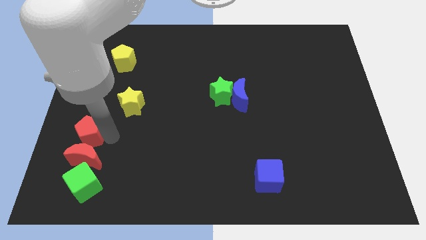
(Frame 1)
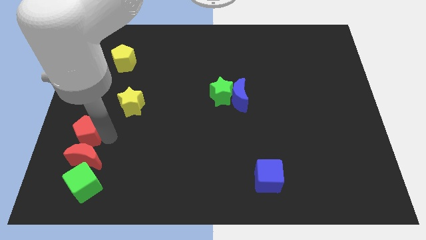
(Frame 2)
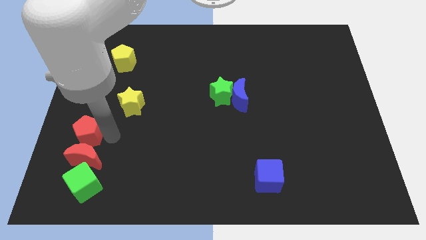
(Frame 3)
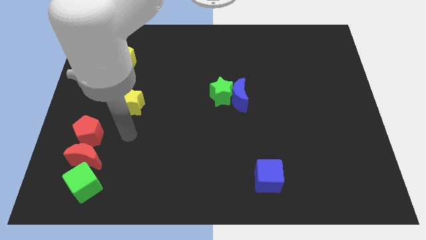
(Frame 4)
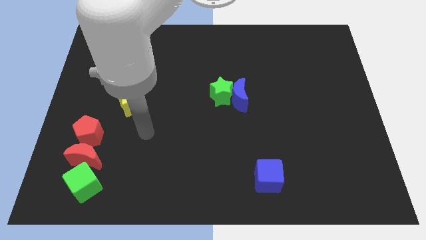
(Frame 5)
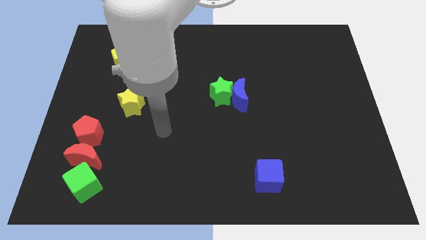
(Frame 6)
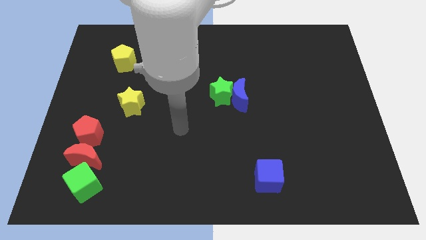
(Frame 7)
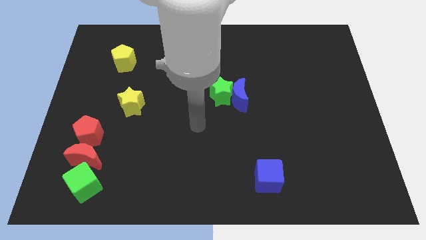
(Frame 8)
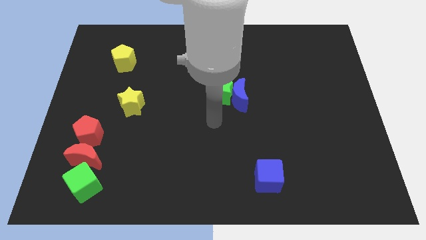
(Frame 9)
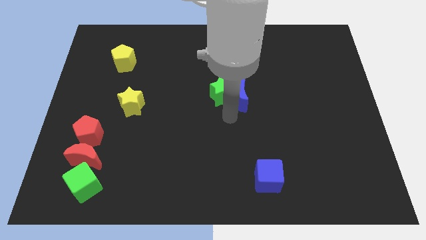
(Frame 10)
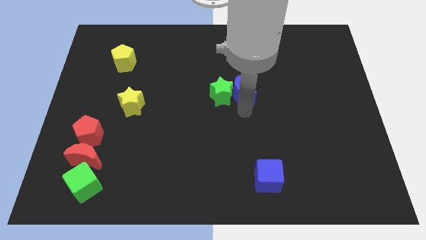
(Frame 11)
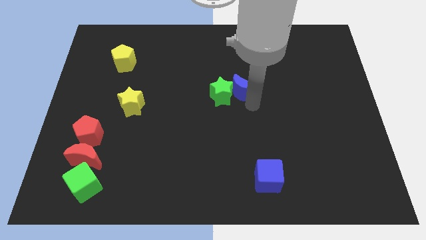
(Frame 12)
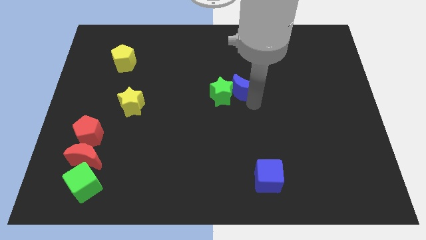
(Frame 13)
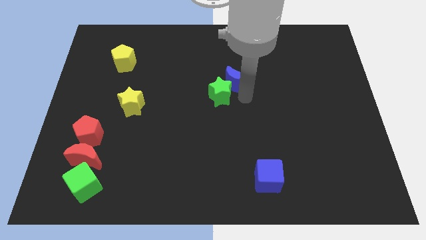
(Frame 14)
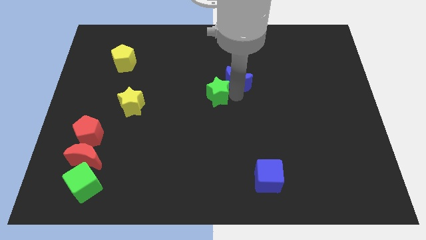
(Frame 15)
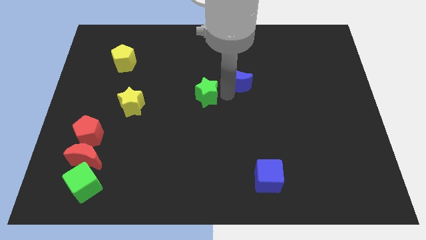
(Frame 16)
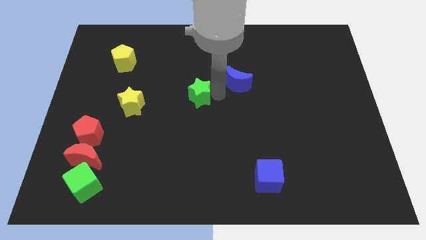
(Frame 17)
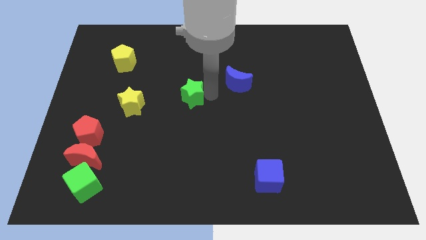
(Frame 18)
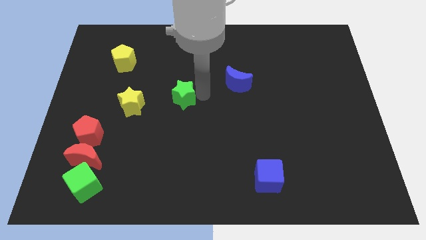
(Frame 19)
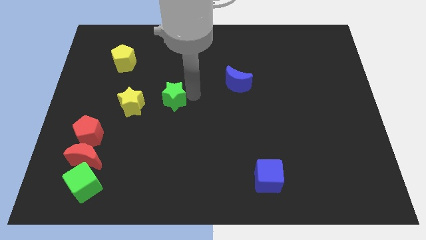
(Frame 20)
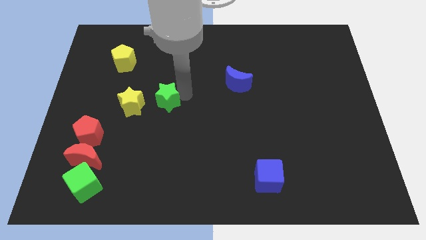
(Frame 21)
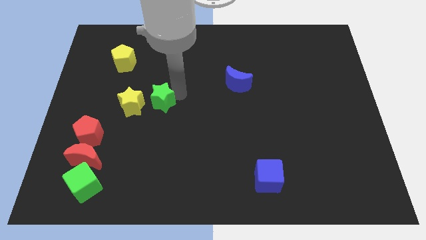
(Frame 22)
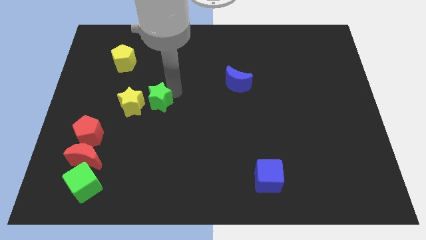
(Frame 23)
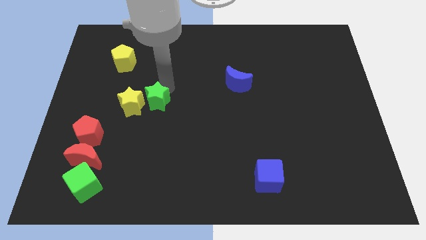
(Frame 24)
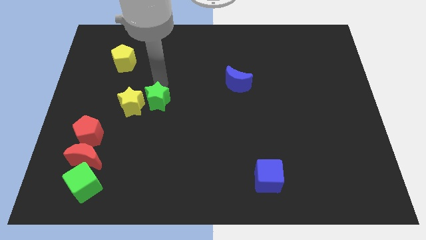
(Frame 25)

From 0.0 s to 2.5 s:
push the green star to the right of the yellow star

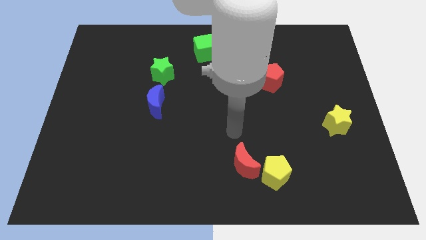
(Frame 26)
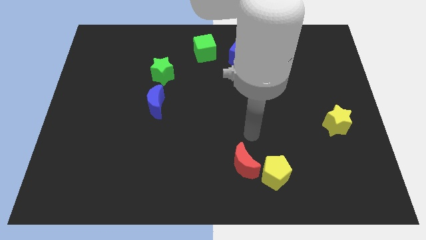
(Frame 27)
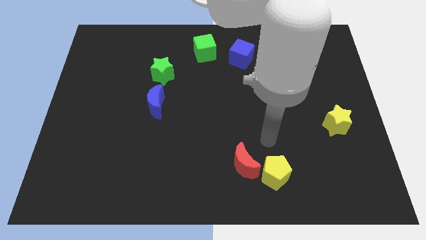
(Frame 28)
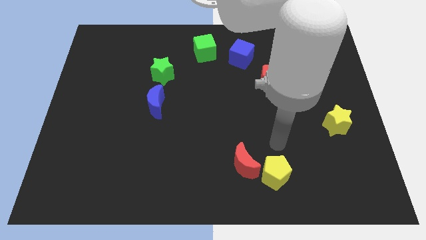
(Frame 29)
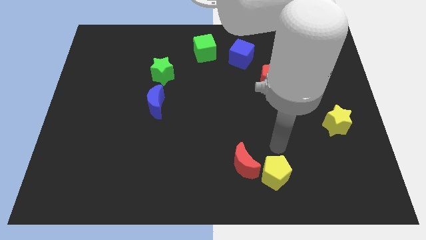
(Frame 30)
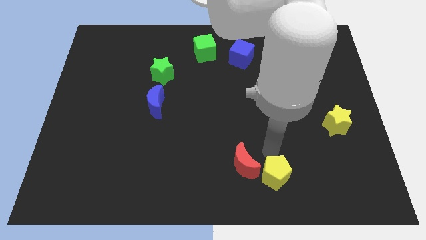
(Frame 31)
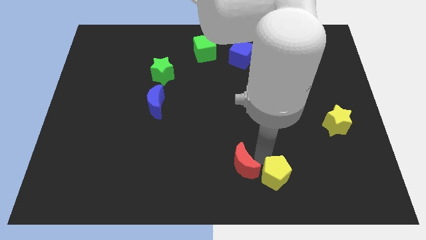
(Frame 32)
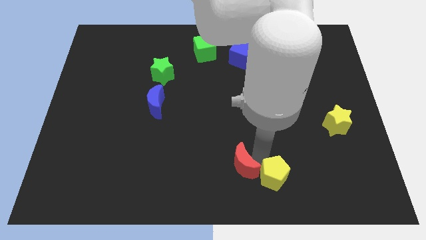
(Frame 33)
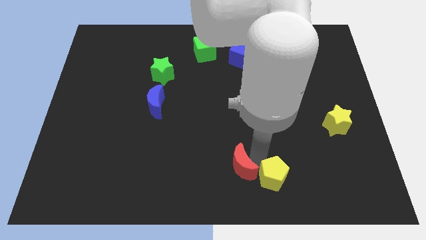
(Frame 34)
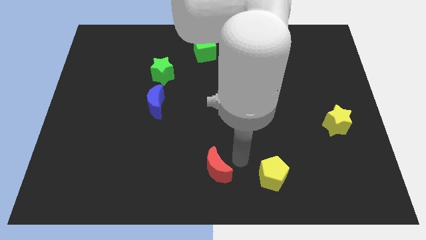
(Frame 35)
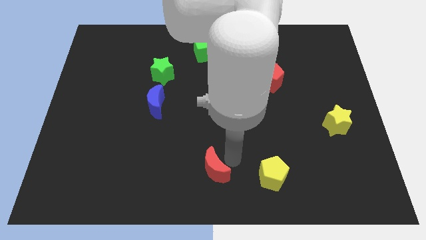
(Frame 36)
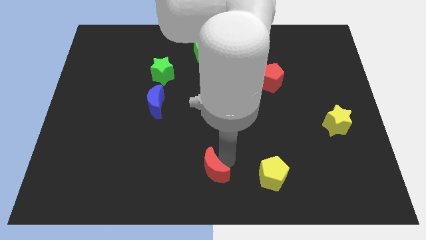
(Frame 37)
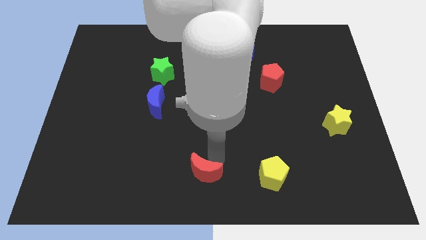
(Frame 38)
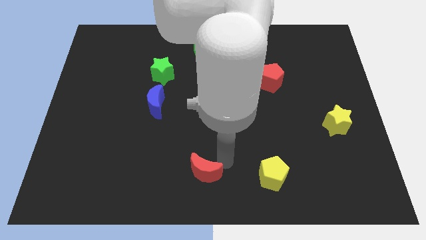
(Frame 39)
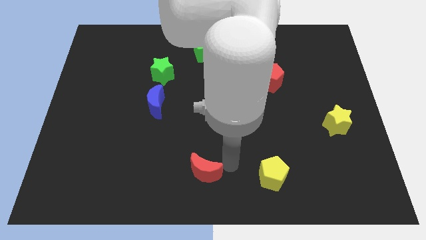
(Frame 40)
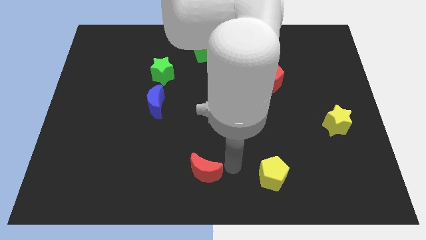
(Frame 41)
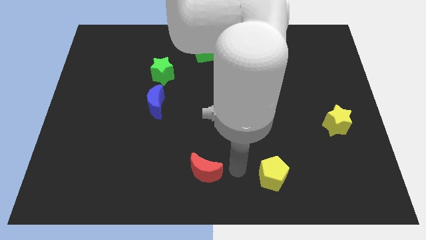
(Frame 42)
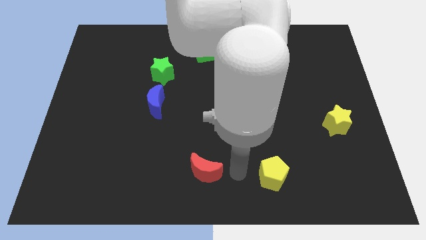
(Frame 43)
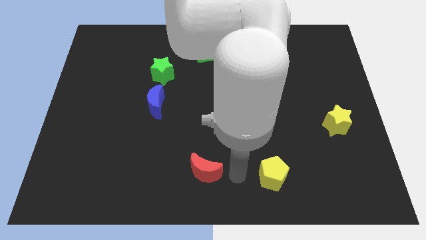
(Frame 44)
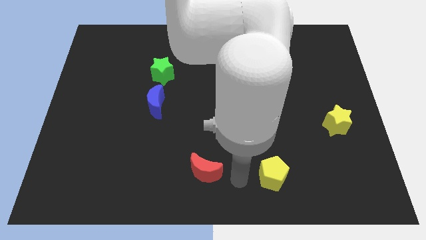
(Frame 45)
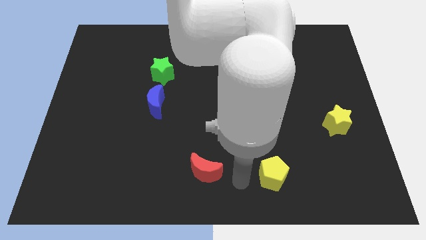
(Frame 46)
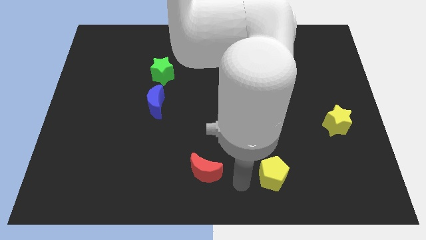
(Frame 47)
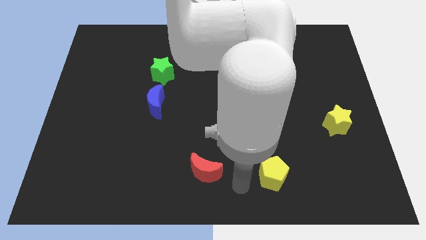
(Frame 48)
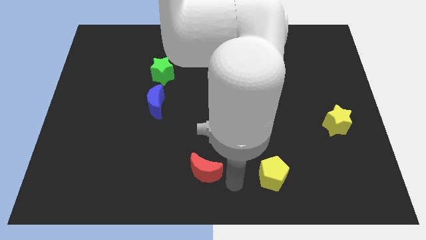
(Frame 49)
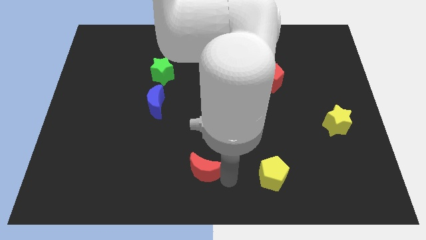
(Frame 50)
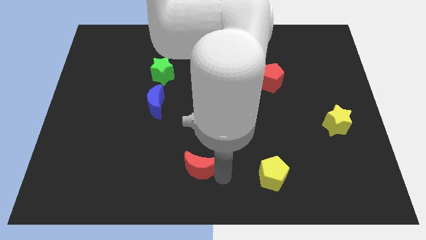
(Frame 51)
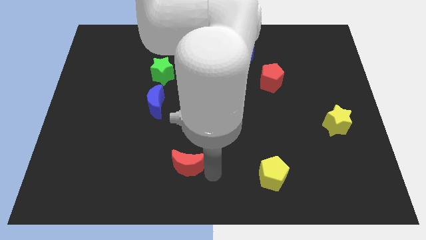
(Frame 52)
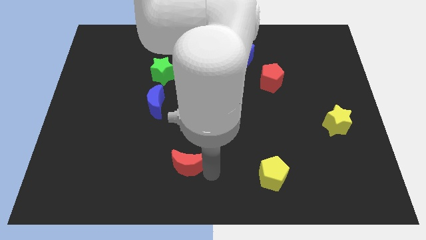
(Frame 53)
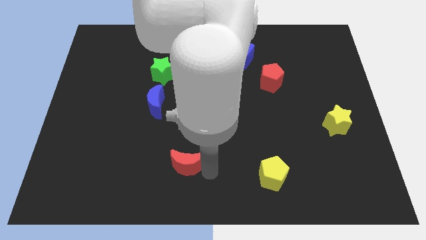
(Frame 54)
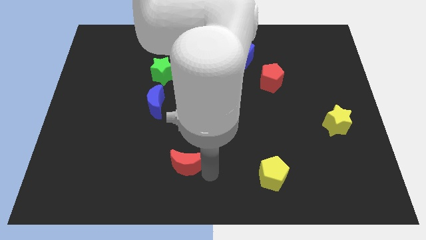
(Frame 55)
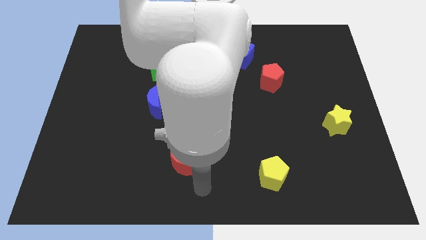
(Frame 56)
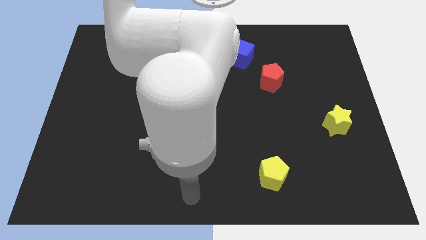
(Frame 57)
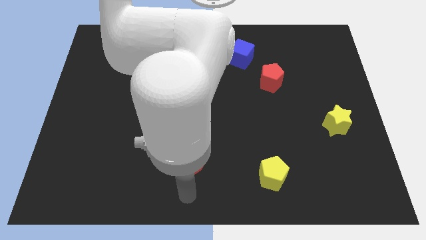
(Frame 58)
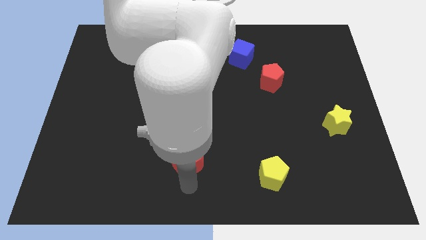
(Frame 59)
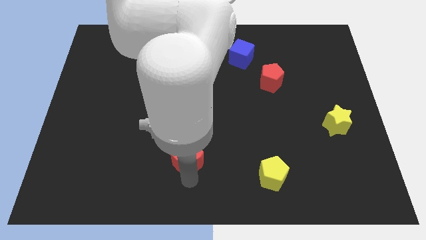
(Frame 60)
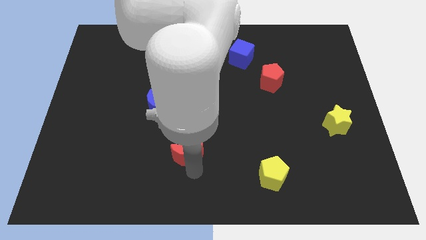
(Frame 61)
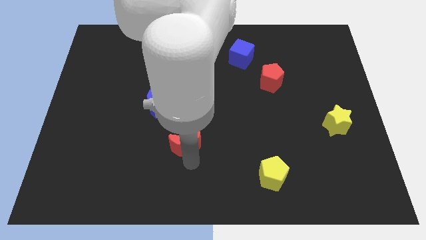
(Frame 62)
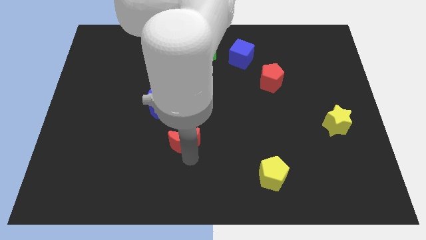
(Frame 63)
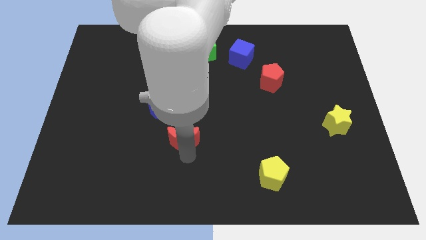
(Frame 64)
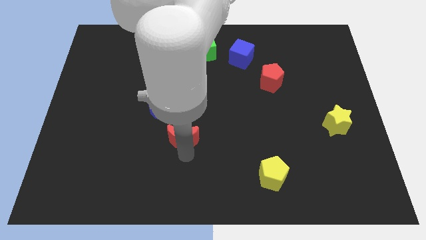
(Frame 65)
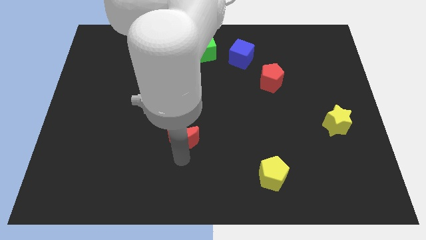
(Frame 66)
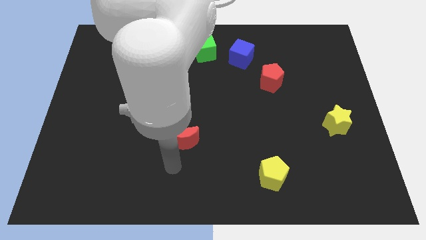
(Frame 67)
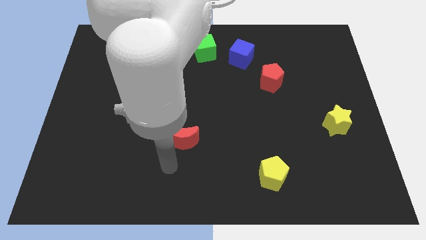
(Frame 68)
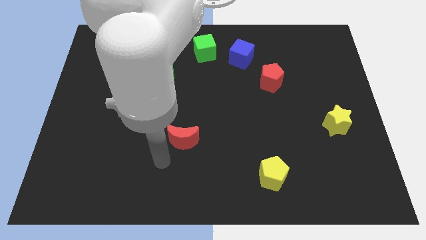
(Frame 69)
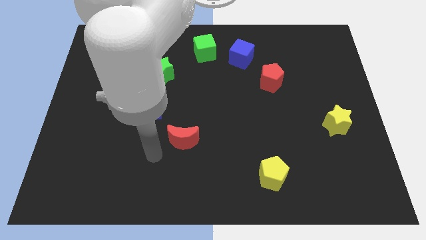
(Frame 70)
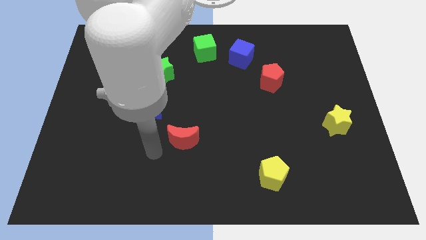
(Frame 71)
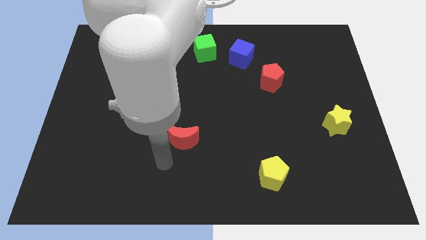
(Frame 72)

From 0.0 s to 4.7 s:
place the red moon on the bottom right of blue moon

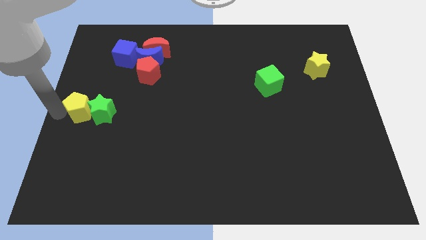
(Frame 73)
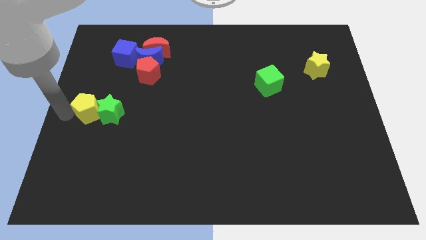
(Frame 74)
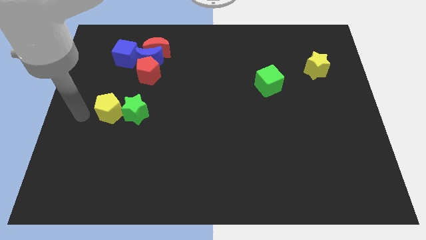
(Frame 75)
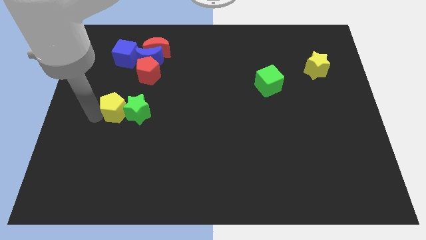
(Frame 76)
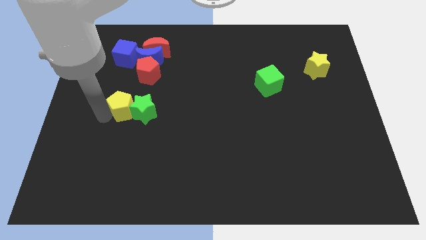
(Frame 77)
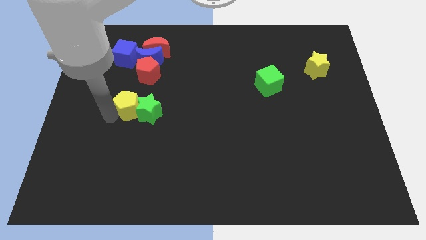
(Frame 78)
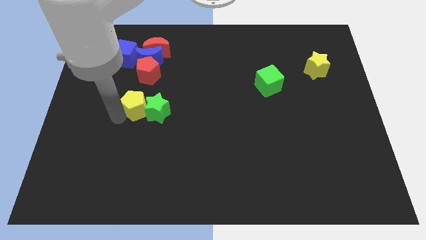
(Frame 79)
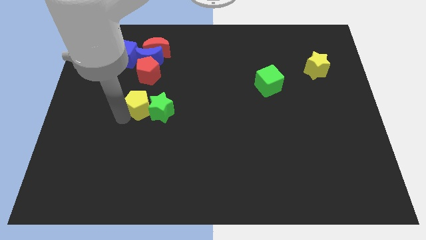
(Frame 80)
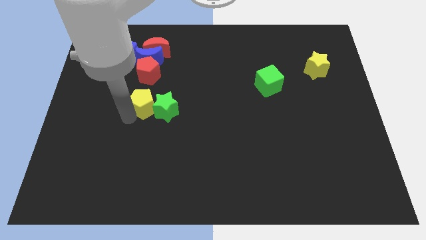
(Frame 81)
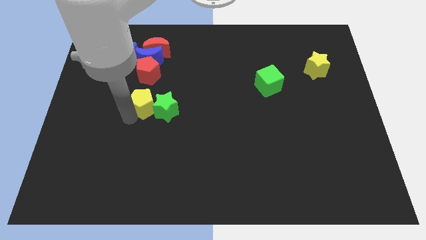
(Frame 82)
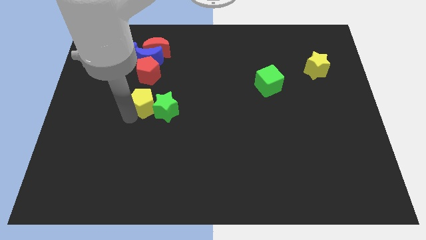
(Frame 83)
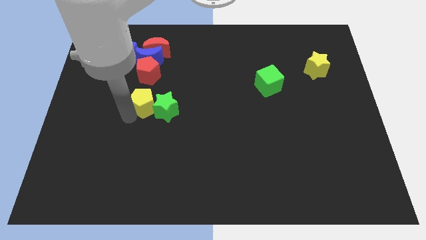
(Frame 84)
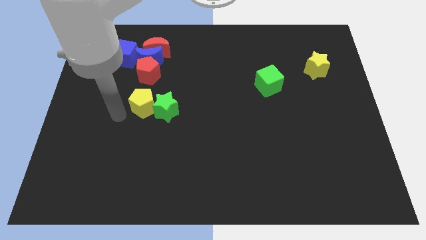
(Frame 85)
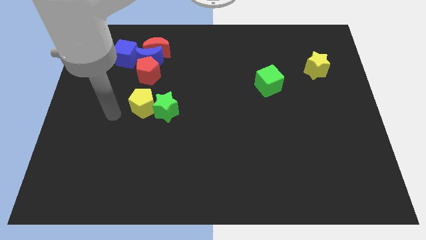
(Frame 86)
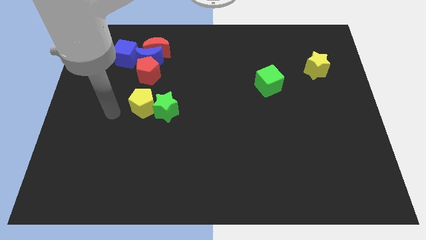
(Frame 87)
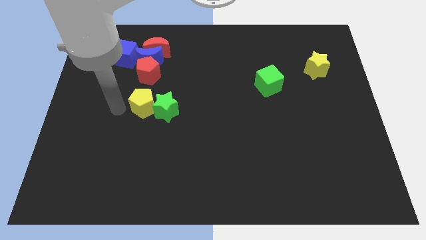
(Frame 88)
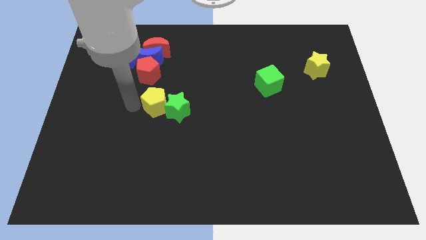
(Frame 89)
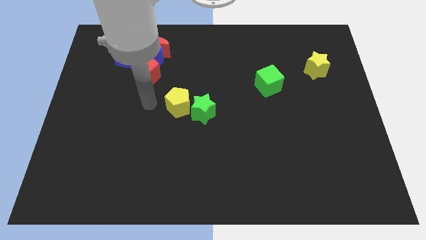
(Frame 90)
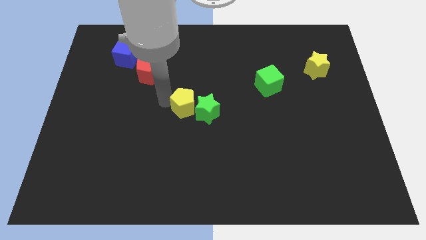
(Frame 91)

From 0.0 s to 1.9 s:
slide yellow pentagon along with the green star towards the center
